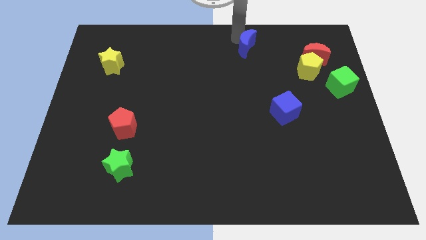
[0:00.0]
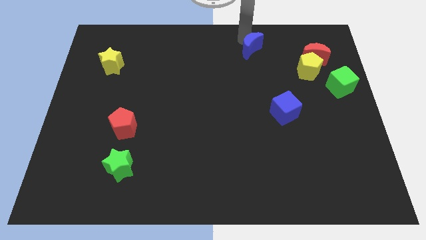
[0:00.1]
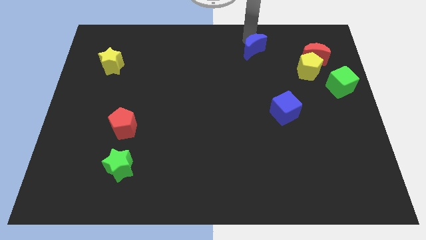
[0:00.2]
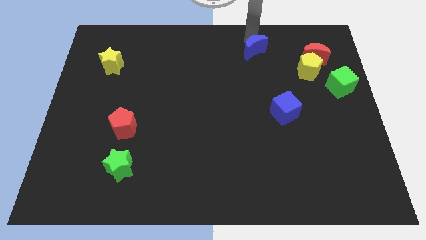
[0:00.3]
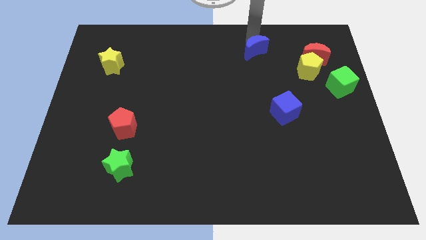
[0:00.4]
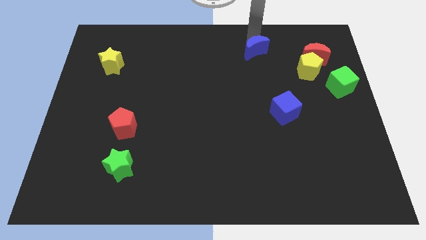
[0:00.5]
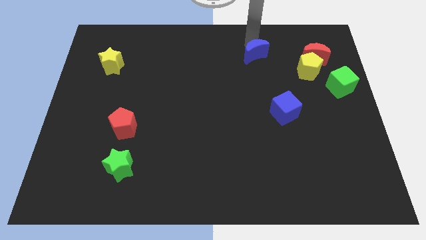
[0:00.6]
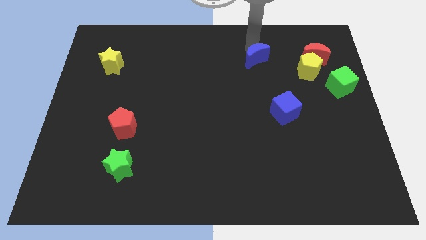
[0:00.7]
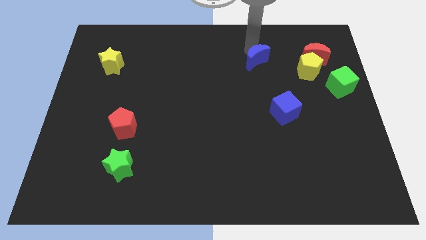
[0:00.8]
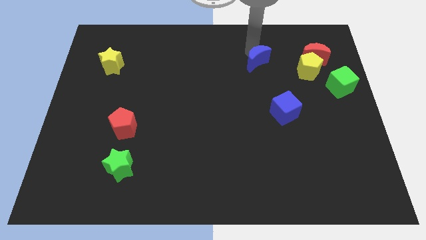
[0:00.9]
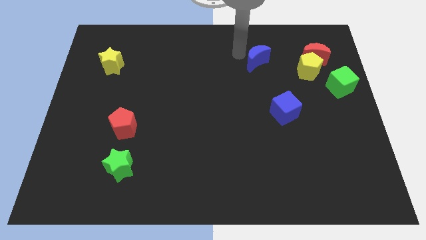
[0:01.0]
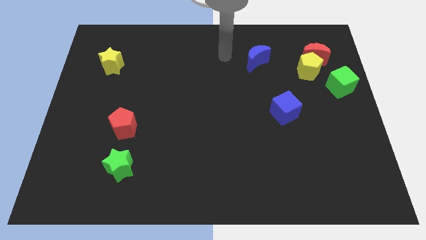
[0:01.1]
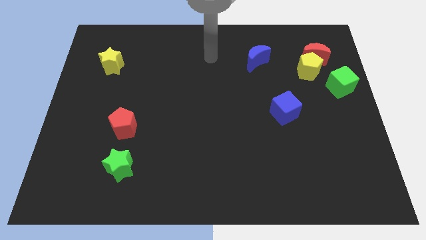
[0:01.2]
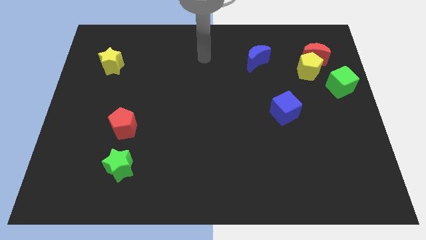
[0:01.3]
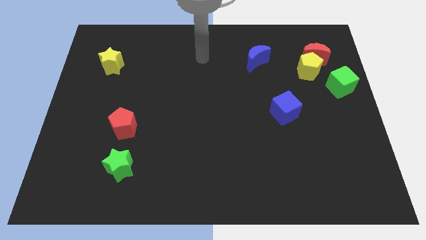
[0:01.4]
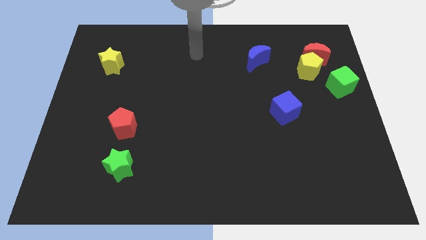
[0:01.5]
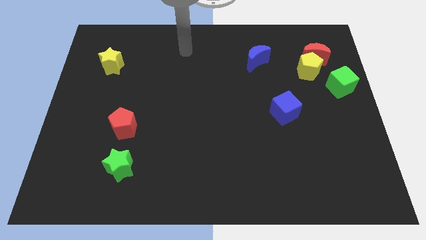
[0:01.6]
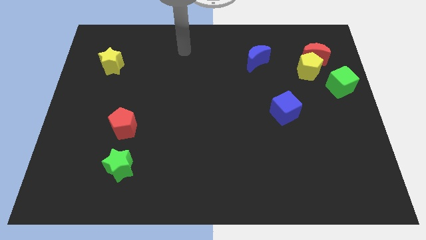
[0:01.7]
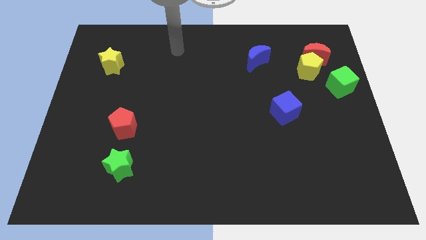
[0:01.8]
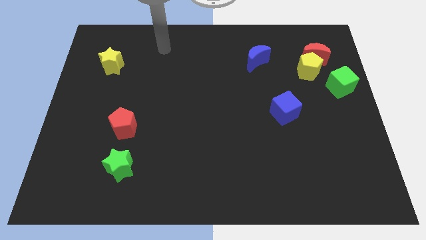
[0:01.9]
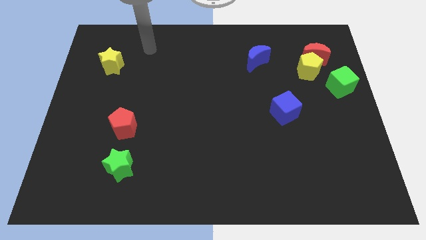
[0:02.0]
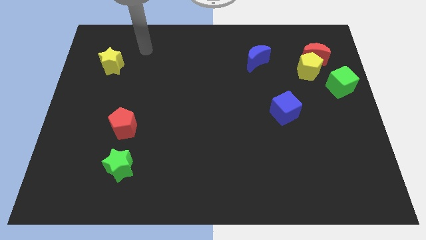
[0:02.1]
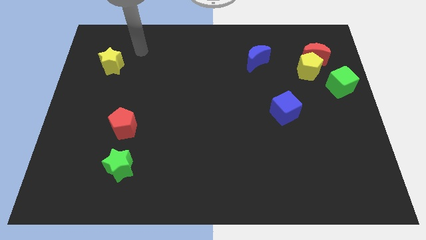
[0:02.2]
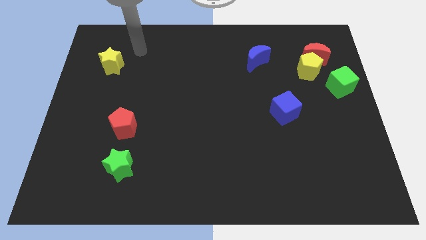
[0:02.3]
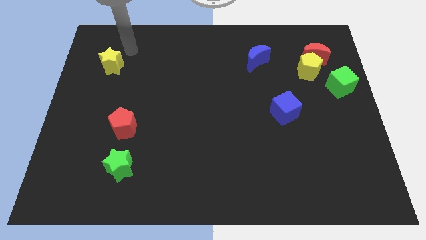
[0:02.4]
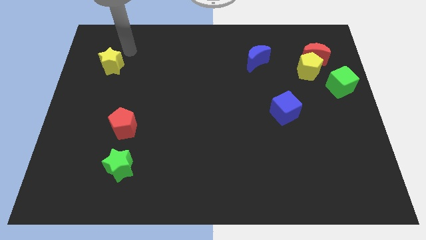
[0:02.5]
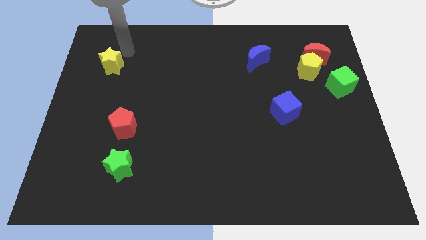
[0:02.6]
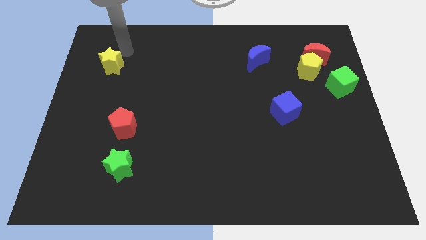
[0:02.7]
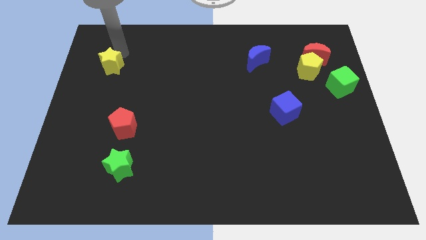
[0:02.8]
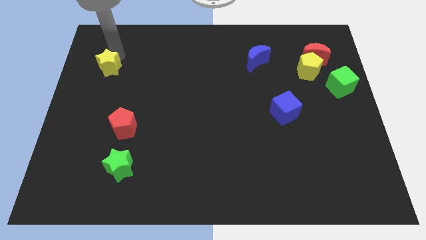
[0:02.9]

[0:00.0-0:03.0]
place the blue moon parallel to the yellow star

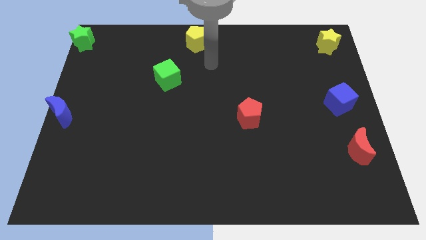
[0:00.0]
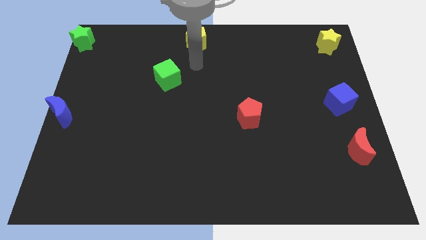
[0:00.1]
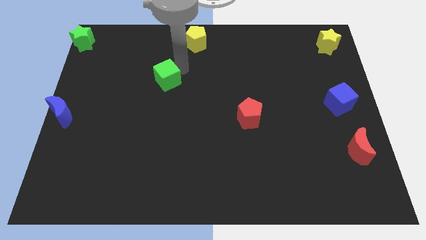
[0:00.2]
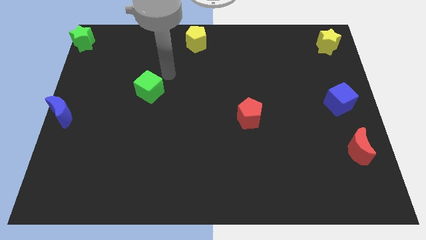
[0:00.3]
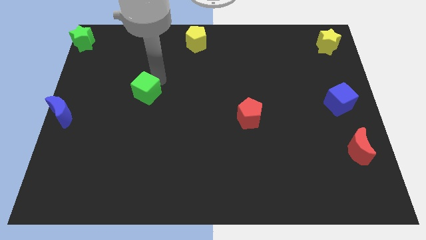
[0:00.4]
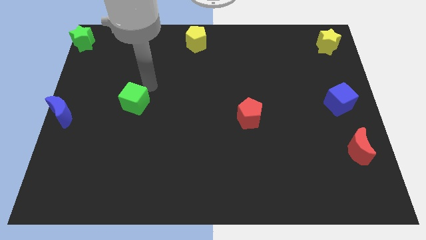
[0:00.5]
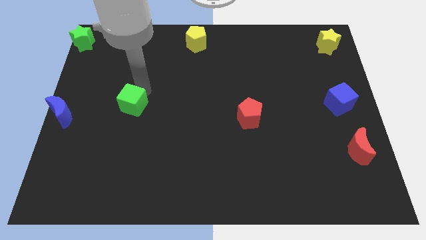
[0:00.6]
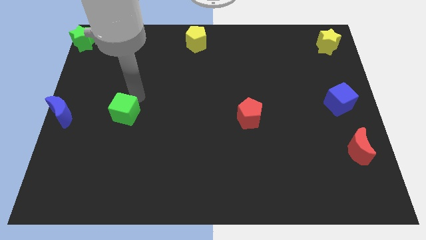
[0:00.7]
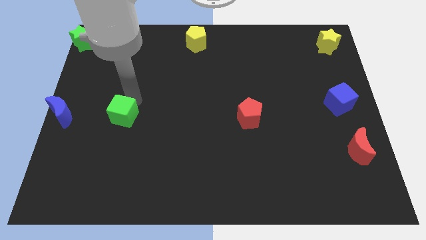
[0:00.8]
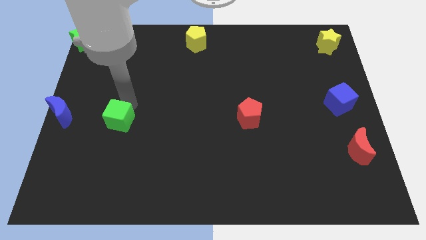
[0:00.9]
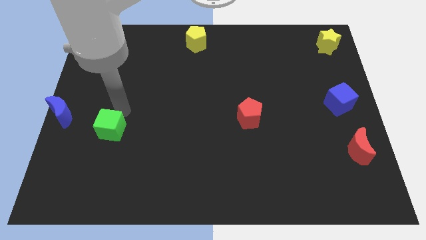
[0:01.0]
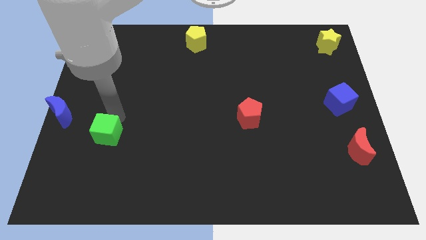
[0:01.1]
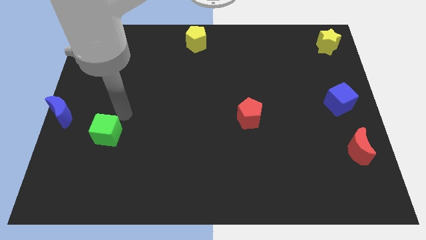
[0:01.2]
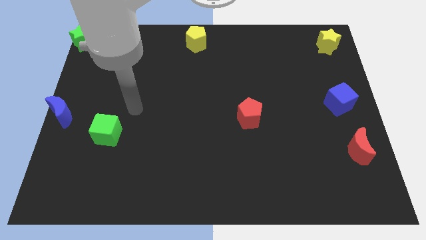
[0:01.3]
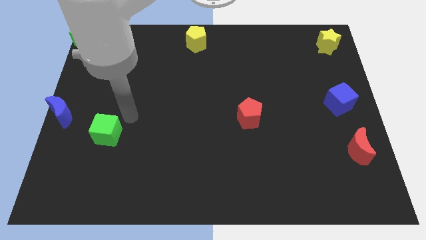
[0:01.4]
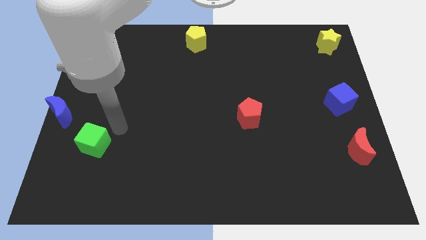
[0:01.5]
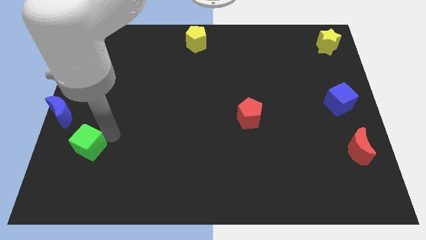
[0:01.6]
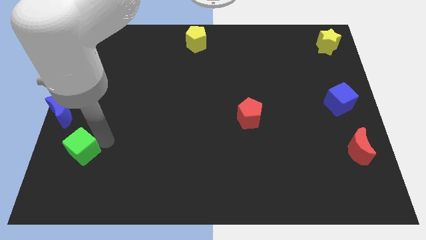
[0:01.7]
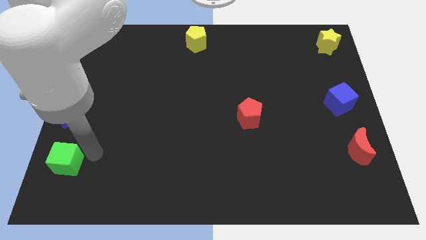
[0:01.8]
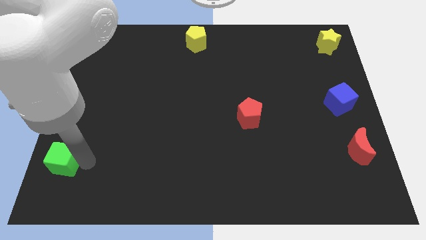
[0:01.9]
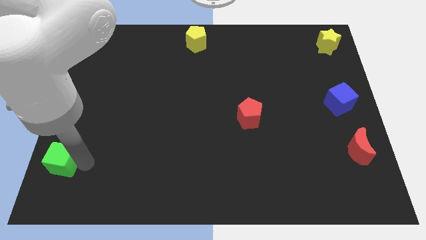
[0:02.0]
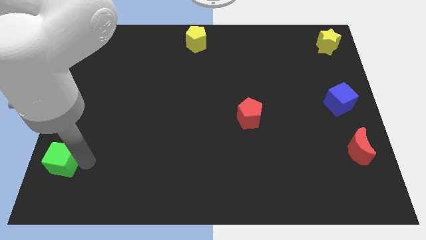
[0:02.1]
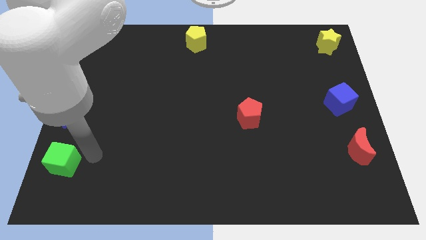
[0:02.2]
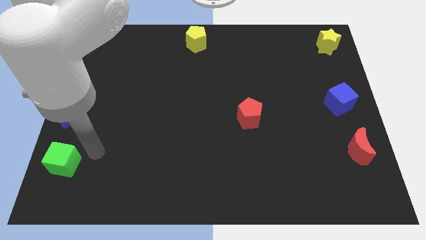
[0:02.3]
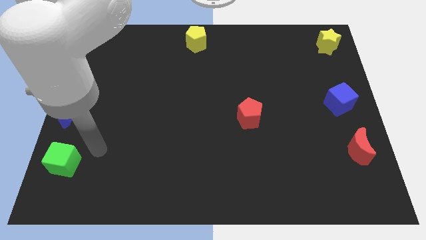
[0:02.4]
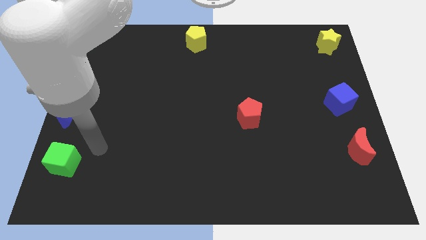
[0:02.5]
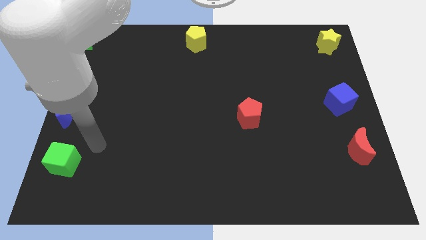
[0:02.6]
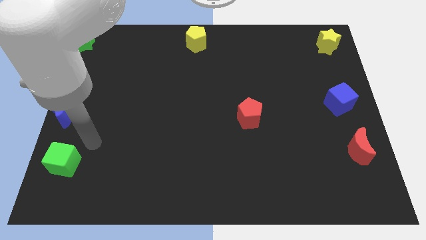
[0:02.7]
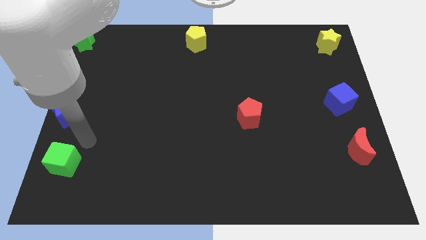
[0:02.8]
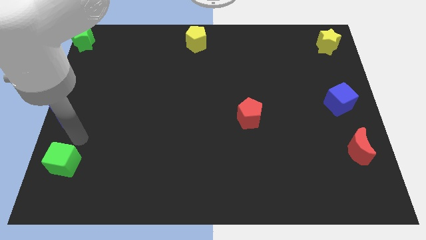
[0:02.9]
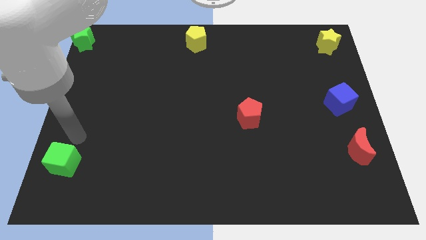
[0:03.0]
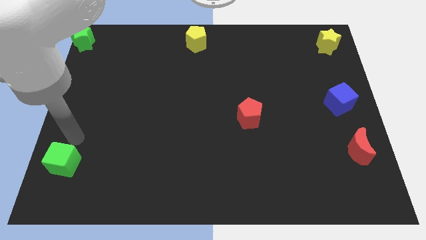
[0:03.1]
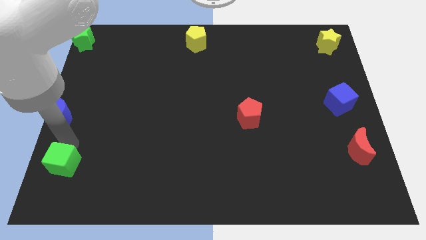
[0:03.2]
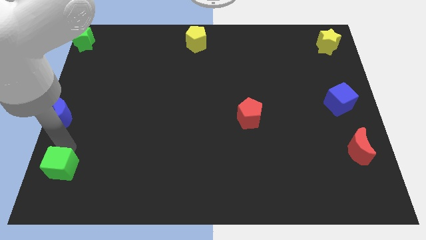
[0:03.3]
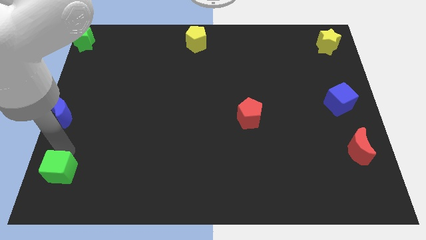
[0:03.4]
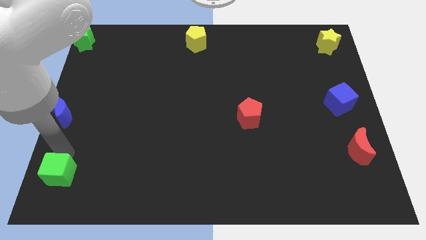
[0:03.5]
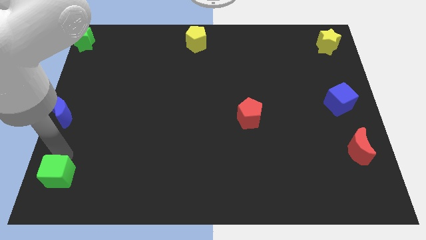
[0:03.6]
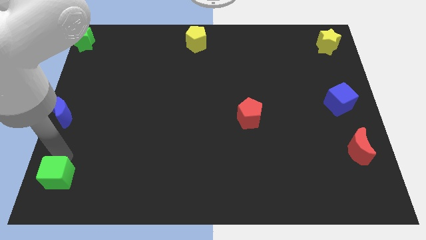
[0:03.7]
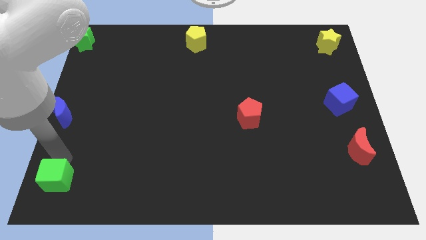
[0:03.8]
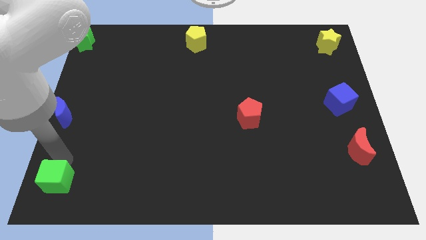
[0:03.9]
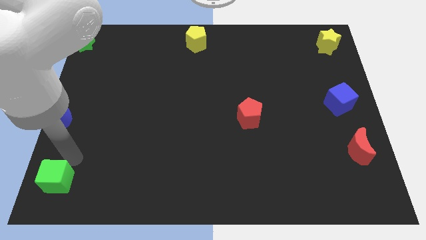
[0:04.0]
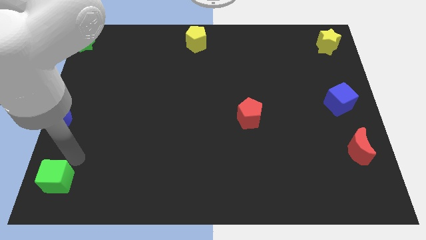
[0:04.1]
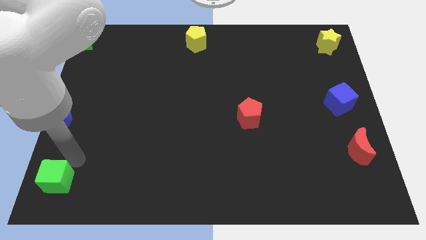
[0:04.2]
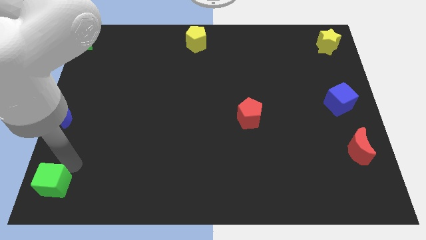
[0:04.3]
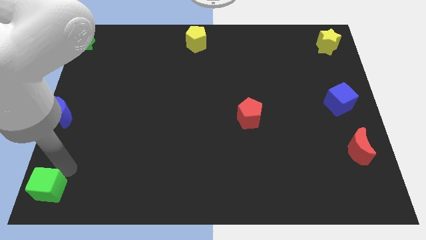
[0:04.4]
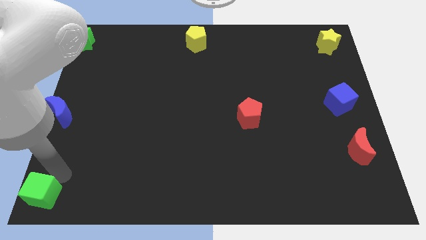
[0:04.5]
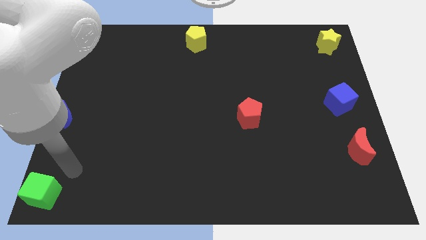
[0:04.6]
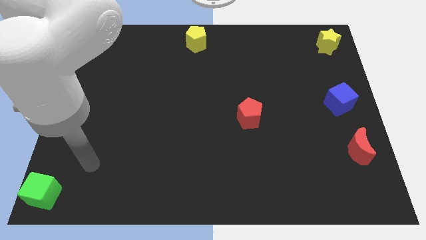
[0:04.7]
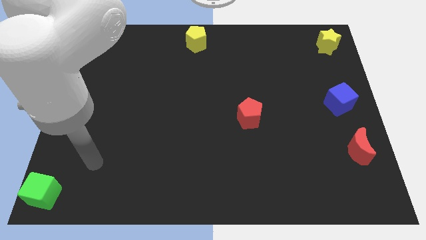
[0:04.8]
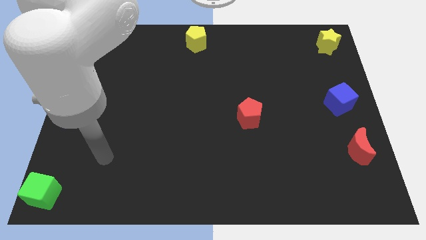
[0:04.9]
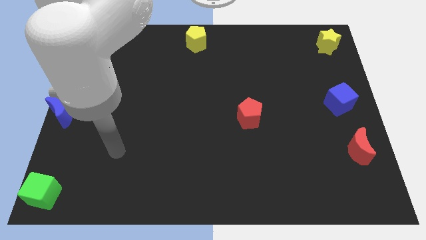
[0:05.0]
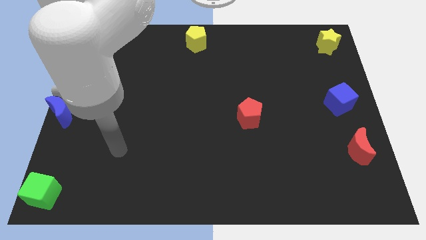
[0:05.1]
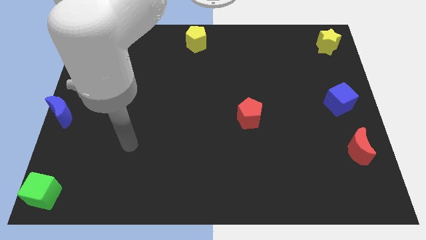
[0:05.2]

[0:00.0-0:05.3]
move green cube left bottom corner

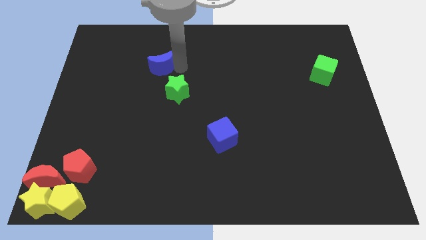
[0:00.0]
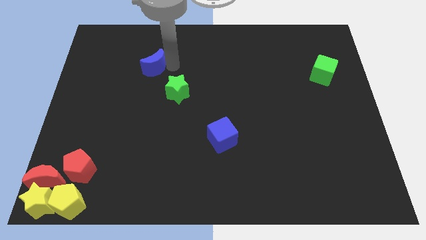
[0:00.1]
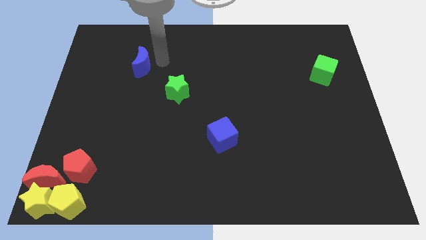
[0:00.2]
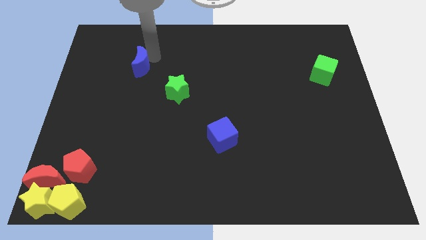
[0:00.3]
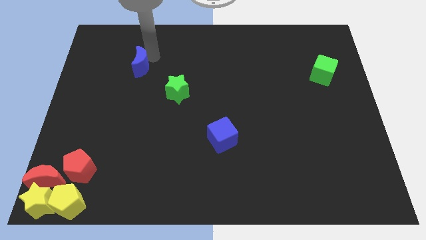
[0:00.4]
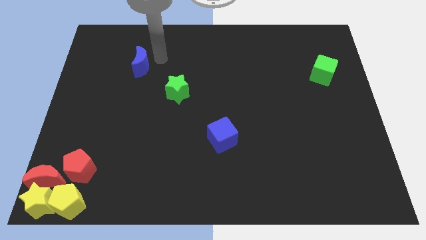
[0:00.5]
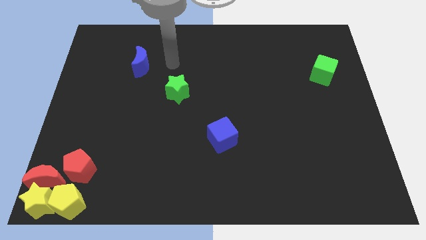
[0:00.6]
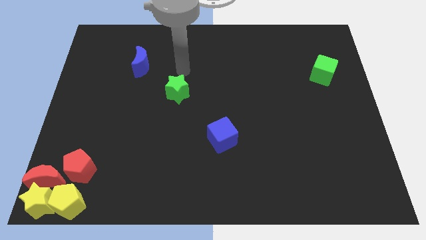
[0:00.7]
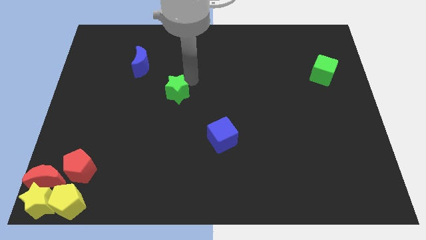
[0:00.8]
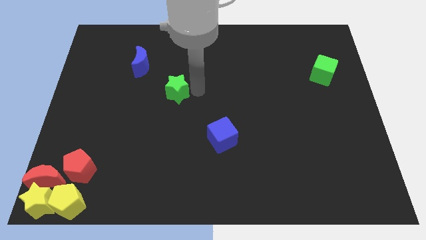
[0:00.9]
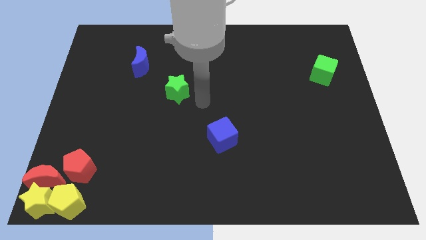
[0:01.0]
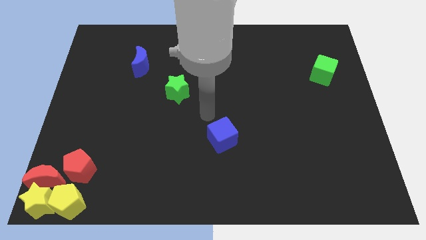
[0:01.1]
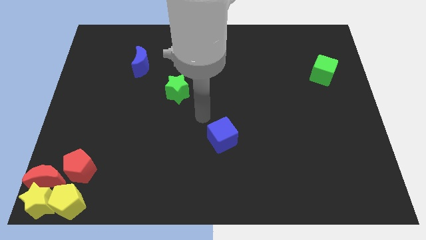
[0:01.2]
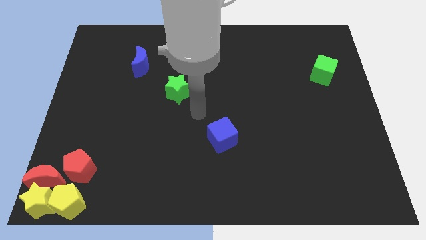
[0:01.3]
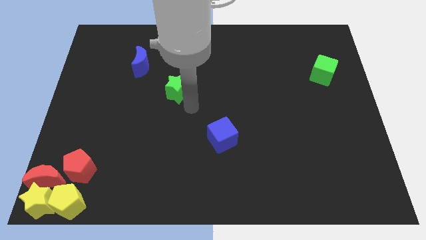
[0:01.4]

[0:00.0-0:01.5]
move the blue crescent opposite to the green star
